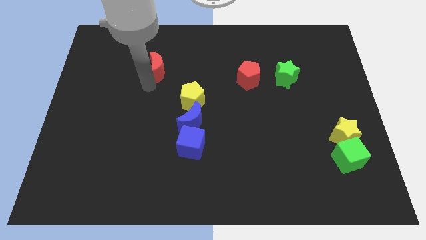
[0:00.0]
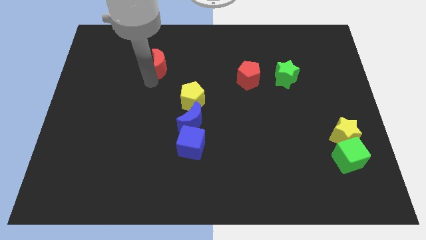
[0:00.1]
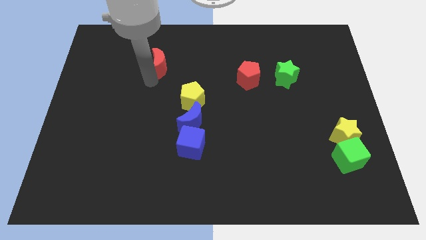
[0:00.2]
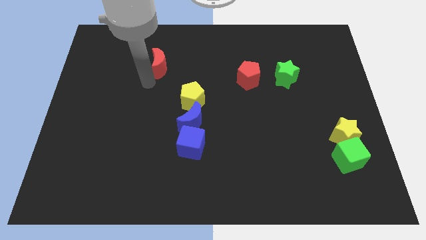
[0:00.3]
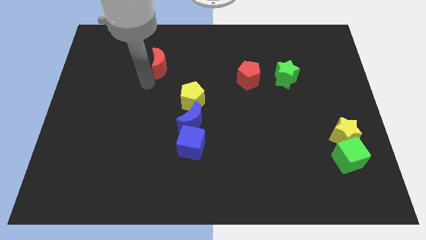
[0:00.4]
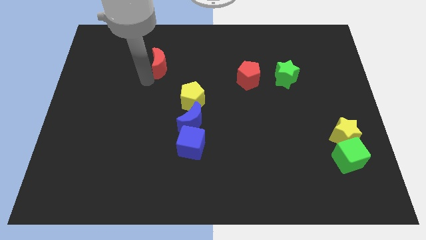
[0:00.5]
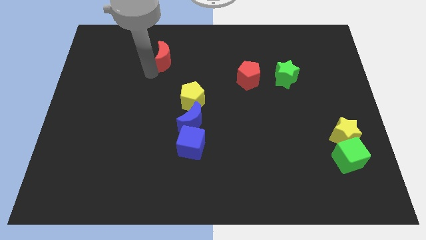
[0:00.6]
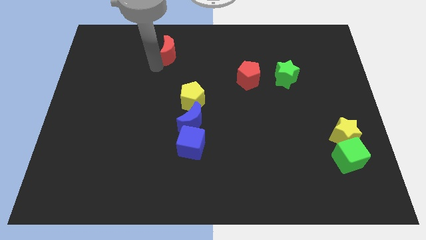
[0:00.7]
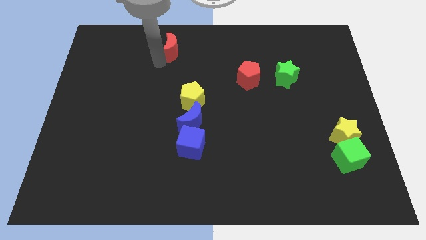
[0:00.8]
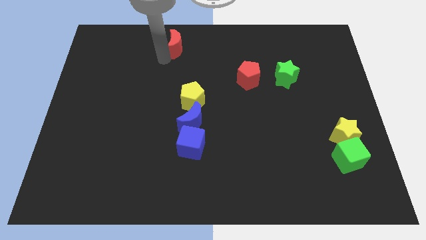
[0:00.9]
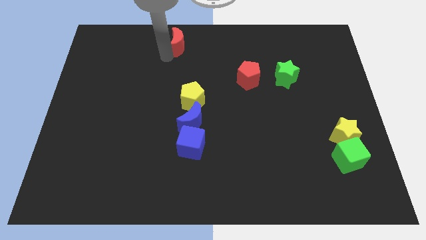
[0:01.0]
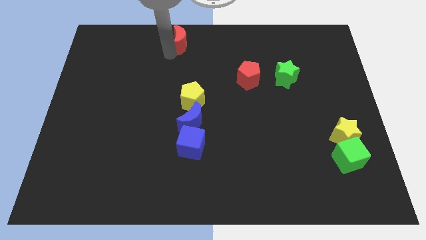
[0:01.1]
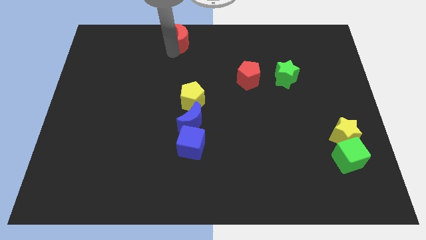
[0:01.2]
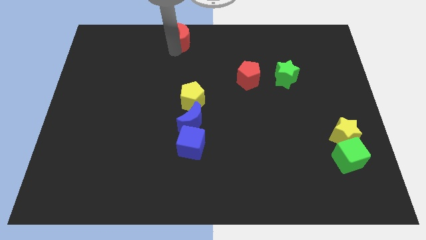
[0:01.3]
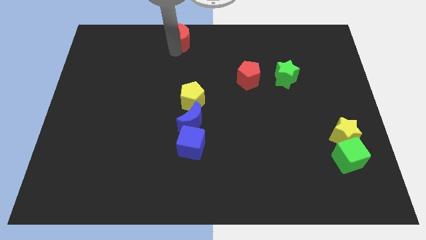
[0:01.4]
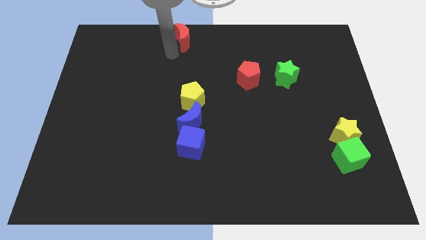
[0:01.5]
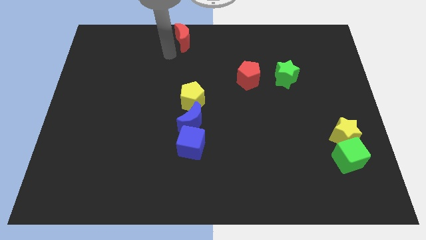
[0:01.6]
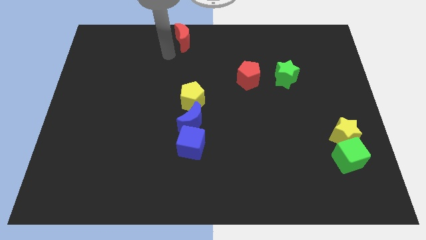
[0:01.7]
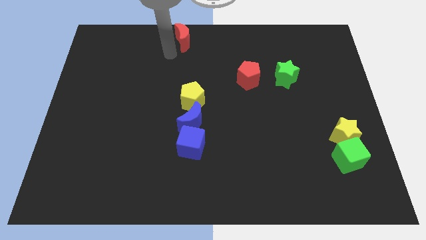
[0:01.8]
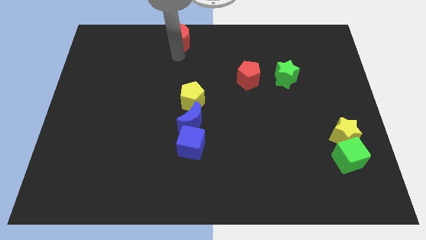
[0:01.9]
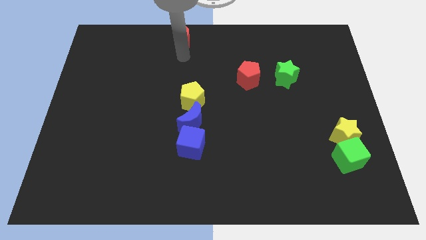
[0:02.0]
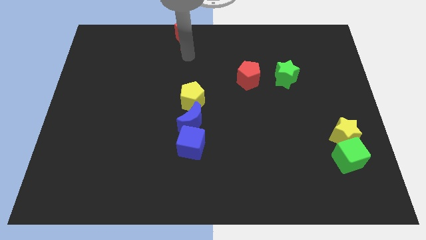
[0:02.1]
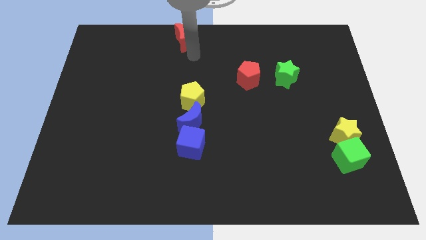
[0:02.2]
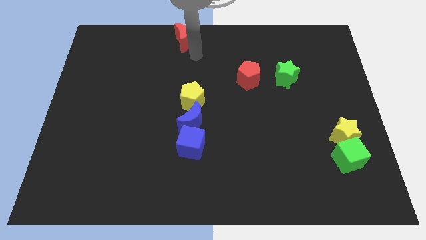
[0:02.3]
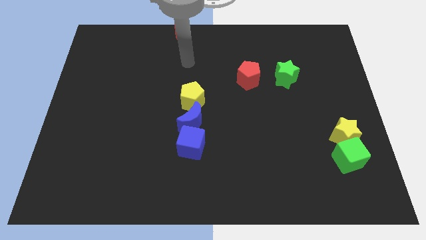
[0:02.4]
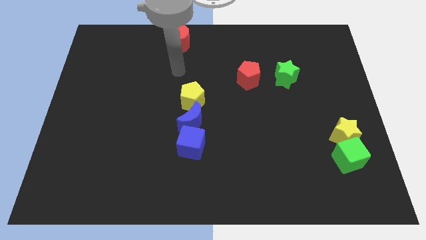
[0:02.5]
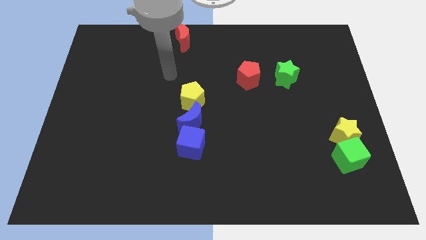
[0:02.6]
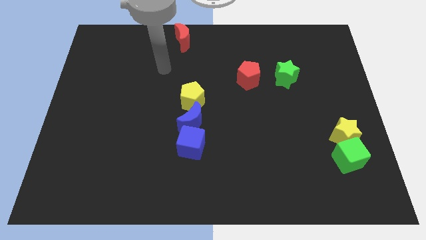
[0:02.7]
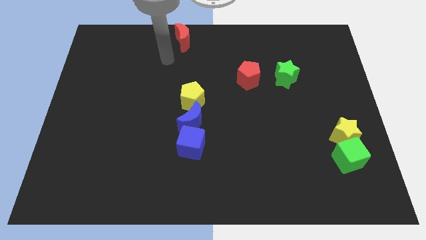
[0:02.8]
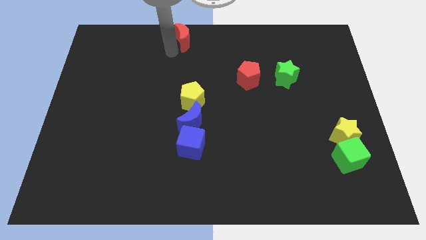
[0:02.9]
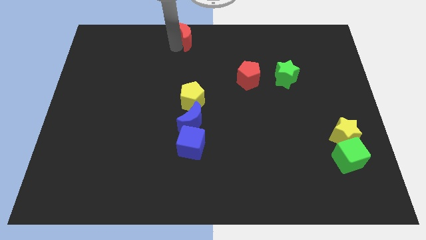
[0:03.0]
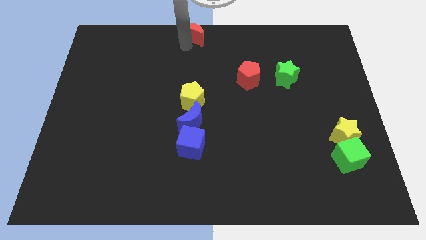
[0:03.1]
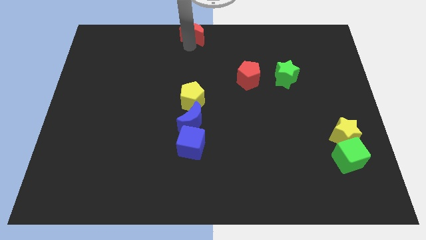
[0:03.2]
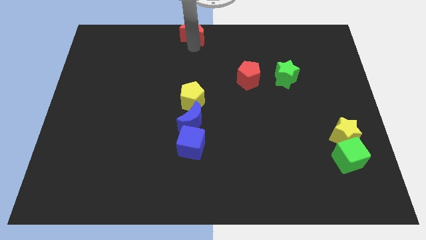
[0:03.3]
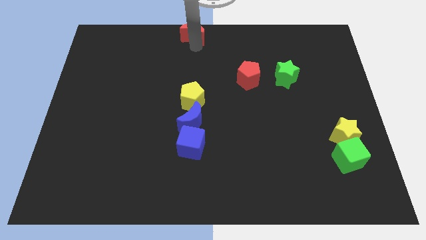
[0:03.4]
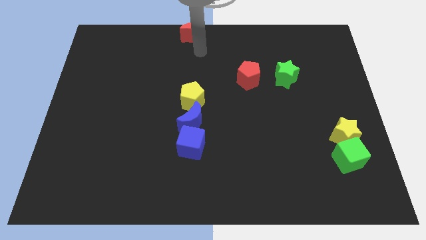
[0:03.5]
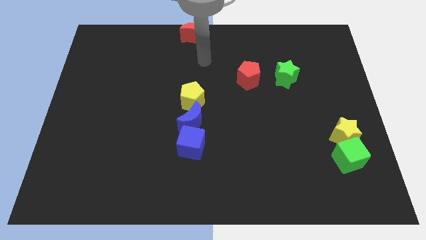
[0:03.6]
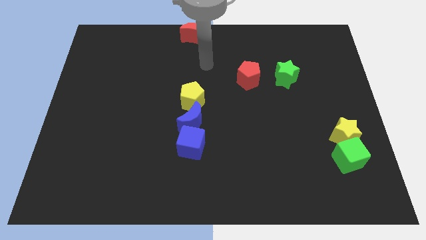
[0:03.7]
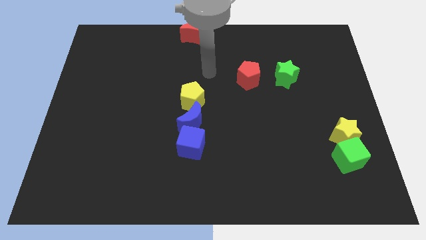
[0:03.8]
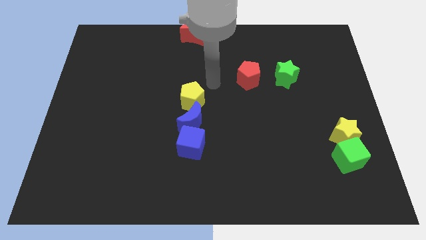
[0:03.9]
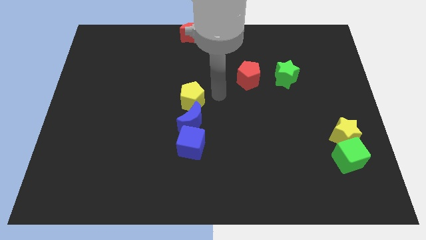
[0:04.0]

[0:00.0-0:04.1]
slide red moon towards top center

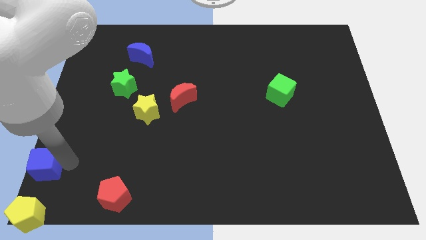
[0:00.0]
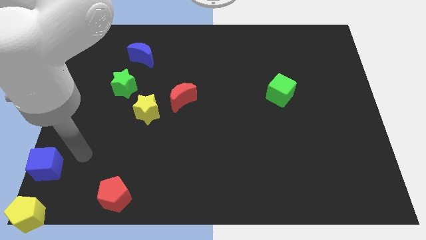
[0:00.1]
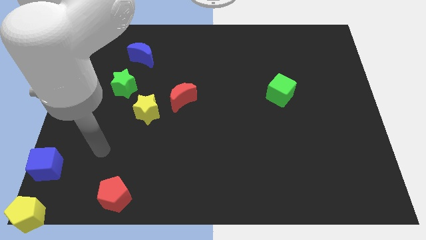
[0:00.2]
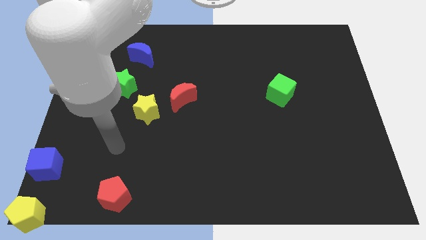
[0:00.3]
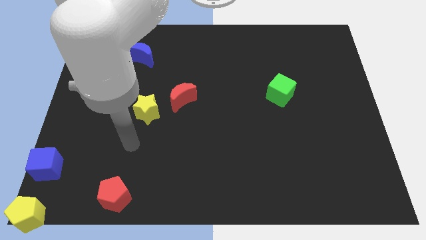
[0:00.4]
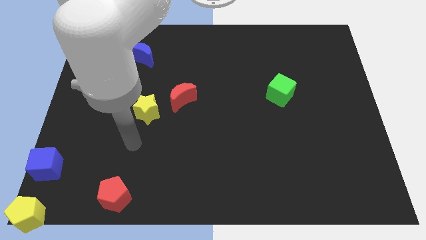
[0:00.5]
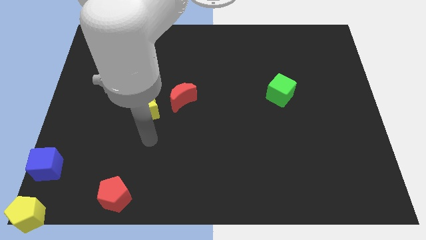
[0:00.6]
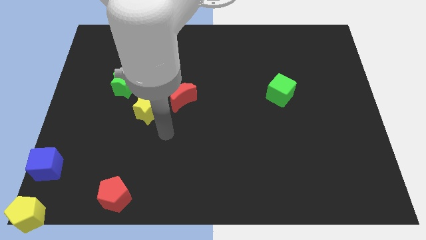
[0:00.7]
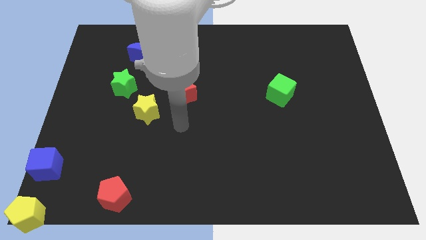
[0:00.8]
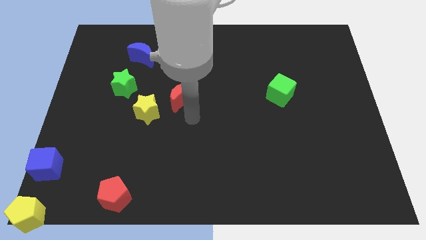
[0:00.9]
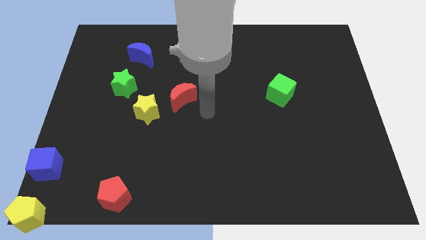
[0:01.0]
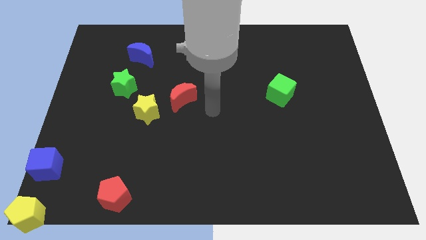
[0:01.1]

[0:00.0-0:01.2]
move your arm away from blue cube

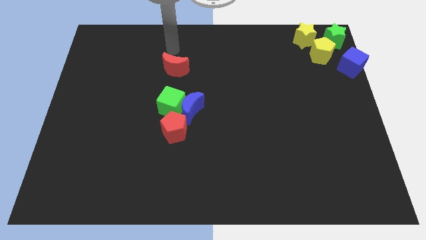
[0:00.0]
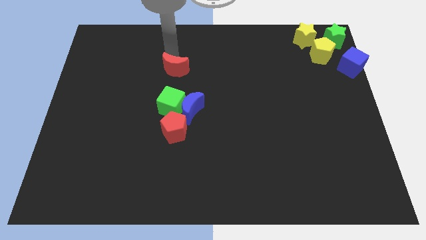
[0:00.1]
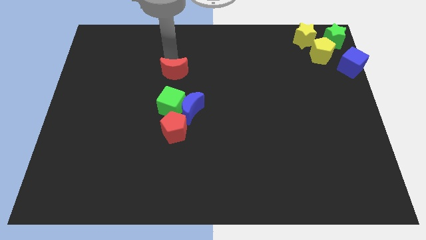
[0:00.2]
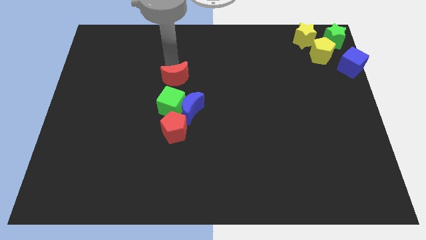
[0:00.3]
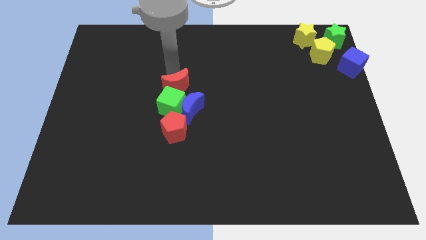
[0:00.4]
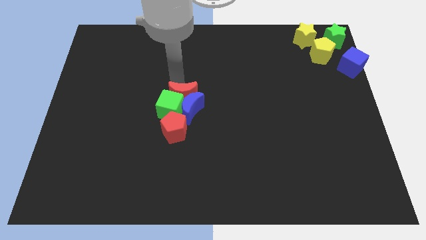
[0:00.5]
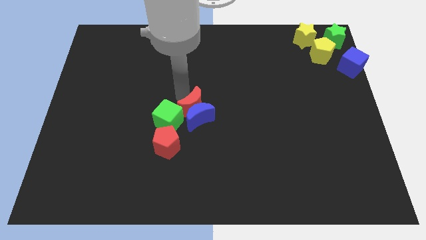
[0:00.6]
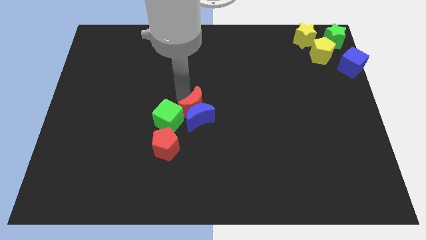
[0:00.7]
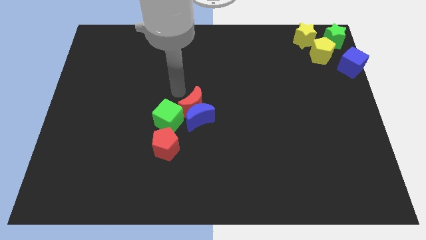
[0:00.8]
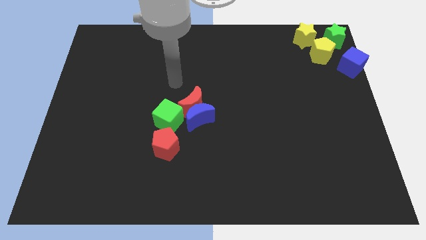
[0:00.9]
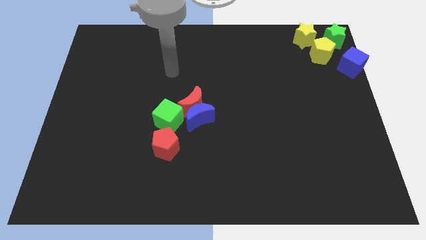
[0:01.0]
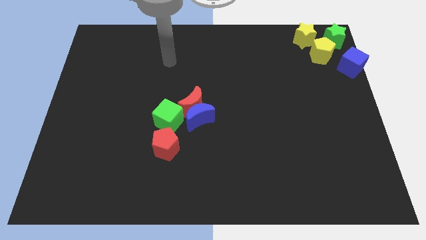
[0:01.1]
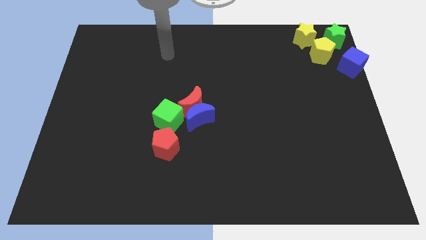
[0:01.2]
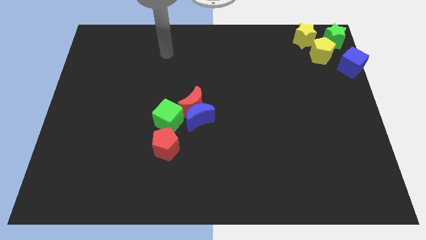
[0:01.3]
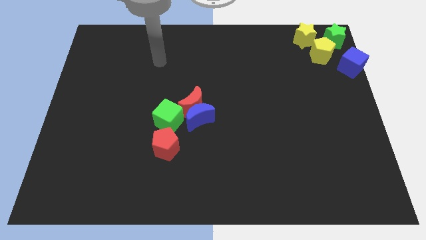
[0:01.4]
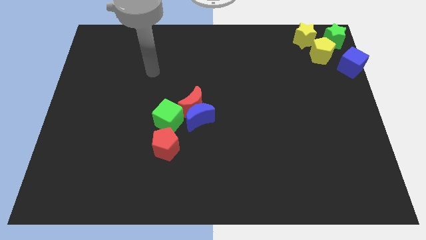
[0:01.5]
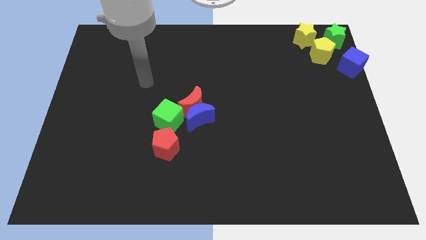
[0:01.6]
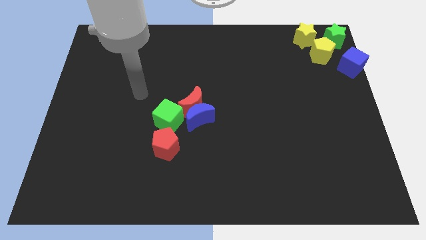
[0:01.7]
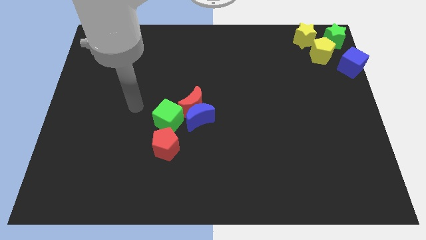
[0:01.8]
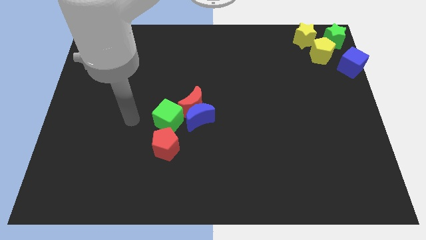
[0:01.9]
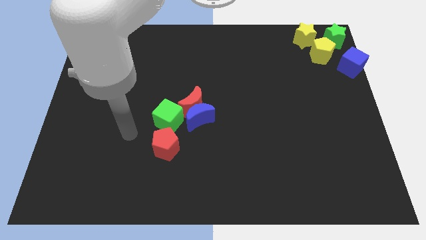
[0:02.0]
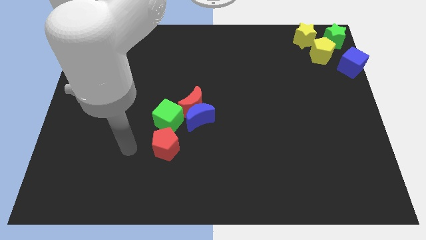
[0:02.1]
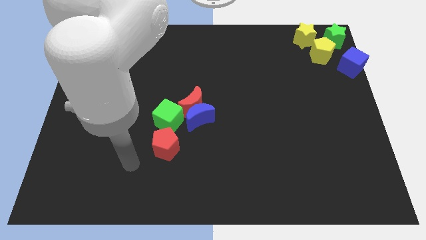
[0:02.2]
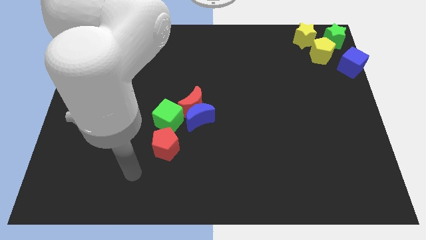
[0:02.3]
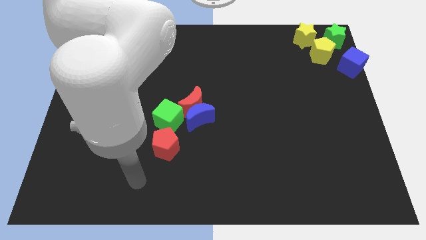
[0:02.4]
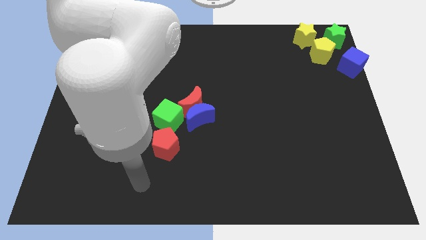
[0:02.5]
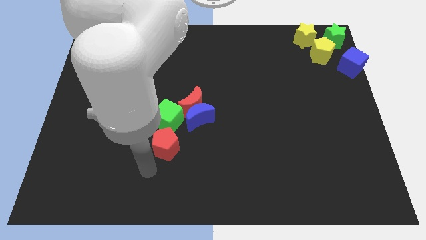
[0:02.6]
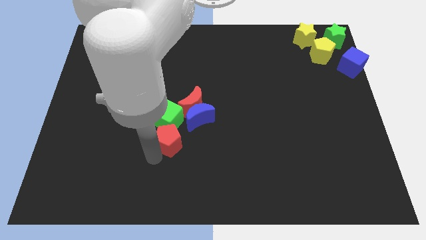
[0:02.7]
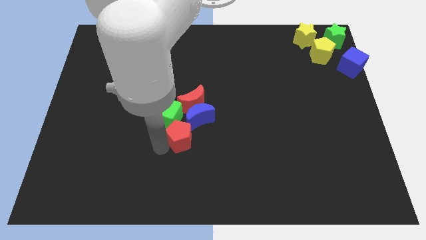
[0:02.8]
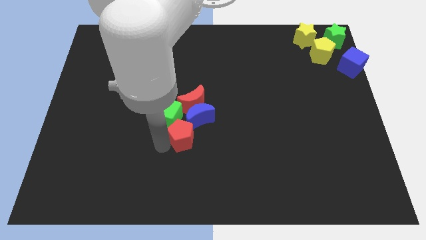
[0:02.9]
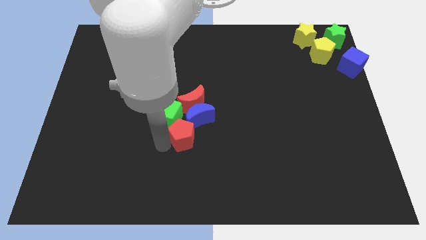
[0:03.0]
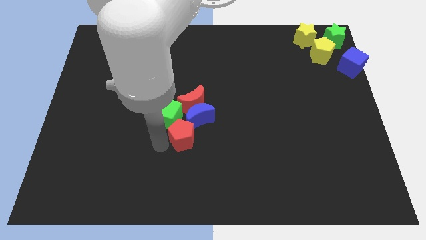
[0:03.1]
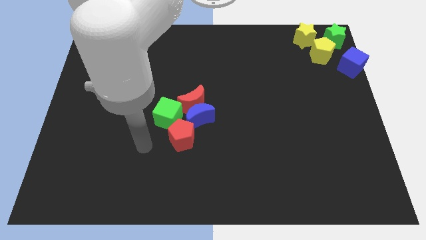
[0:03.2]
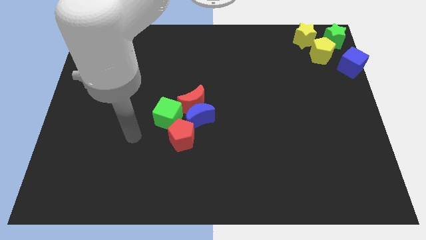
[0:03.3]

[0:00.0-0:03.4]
push the red pentagon into the green cube

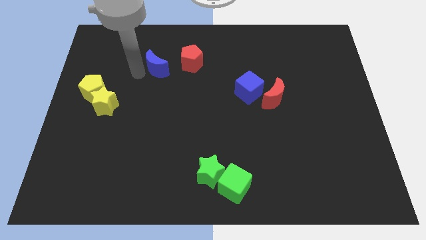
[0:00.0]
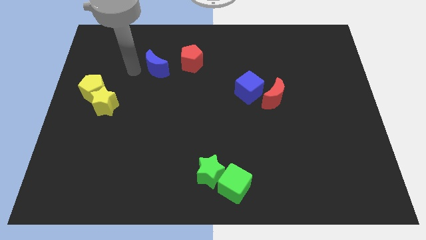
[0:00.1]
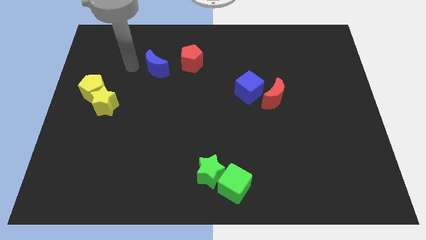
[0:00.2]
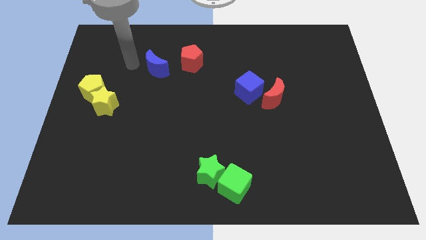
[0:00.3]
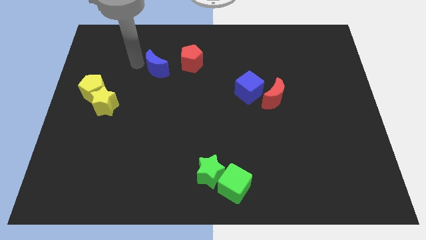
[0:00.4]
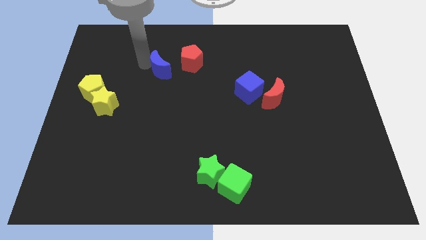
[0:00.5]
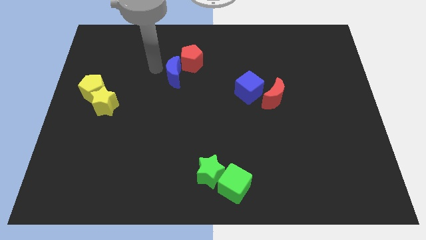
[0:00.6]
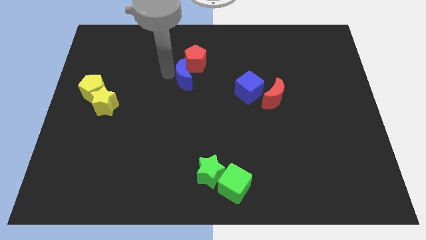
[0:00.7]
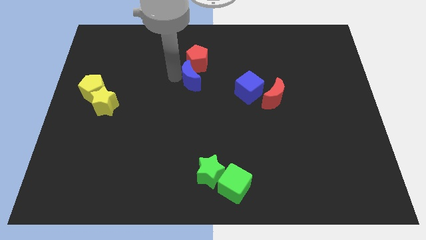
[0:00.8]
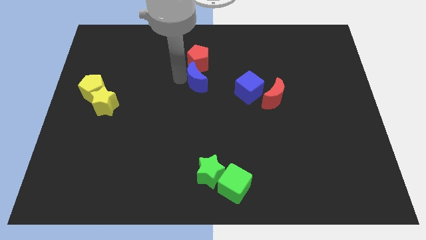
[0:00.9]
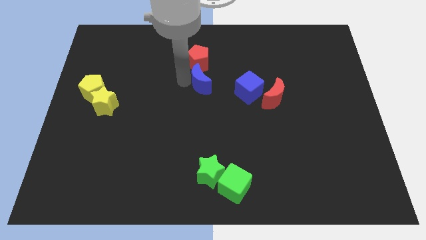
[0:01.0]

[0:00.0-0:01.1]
move the blue crescent below the red pentagon
